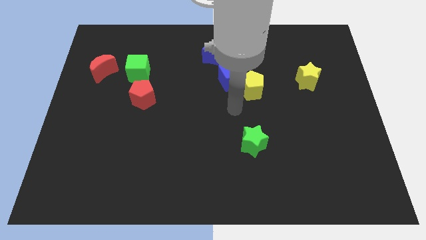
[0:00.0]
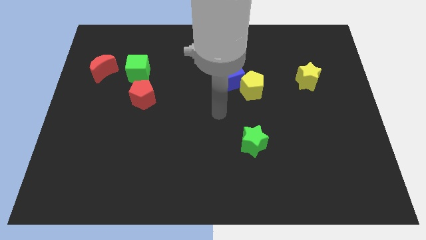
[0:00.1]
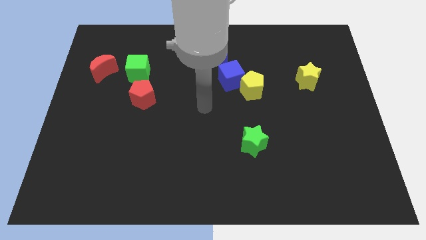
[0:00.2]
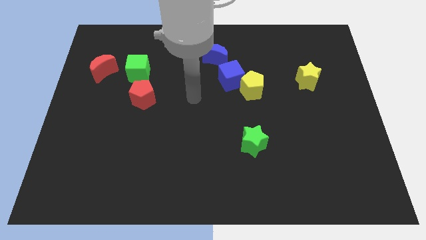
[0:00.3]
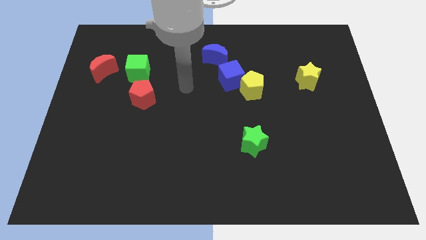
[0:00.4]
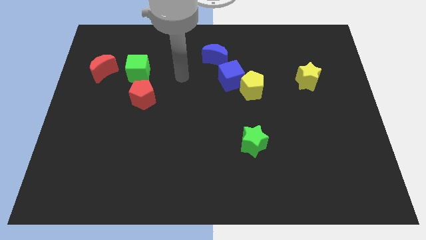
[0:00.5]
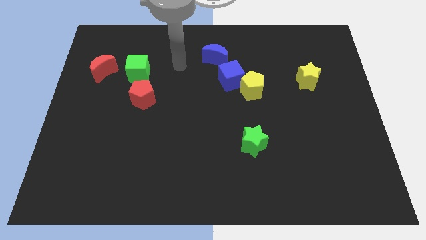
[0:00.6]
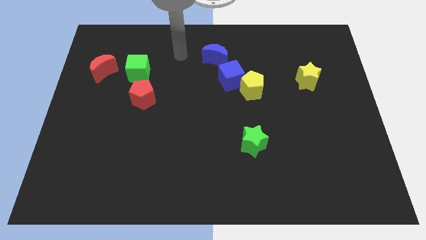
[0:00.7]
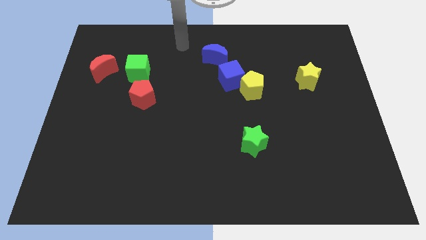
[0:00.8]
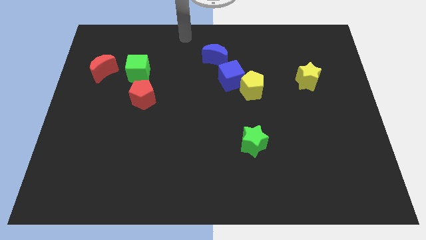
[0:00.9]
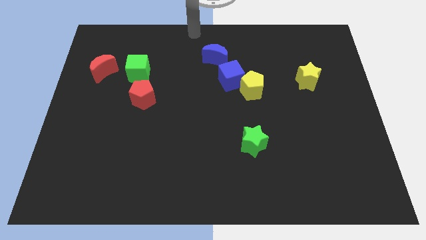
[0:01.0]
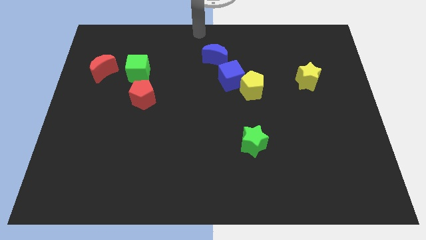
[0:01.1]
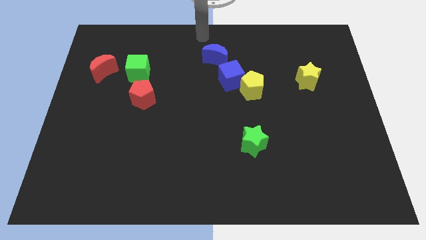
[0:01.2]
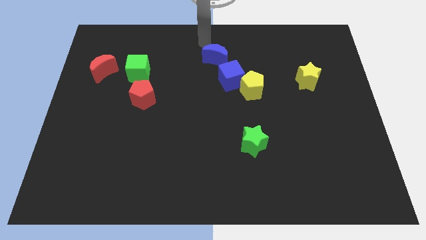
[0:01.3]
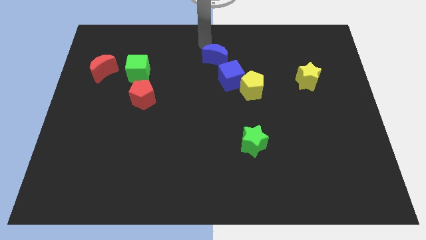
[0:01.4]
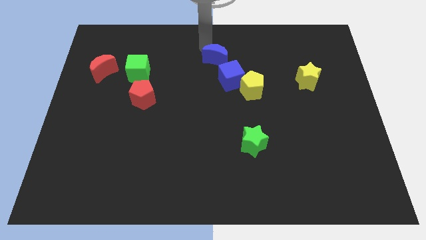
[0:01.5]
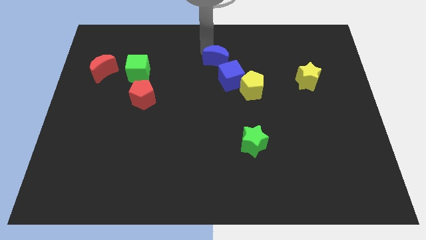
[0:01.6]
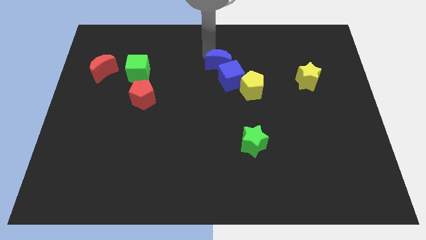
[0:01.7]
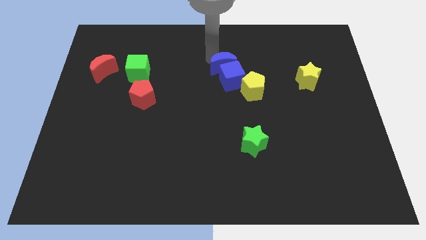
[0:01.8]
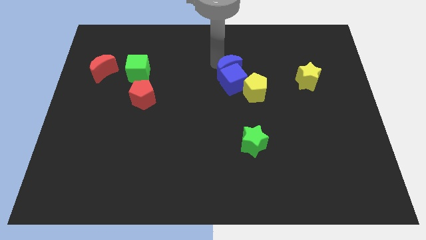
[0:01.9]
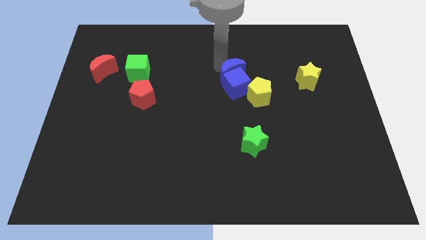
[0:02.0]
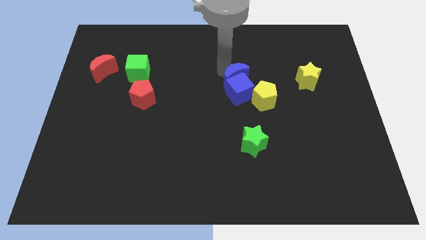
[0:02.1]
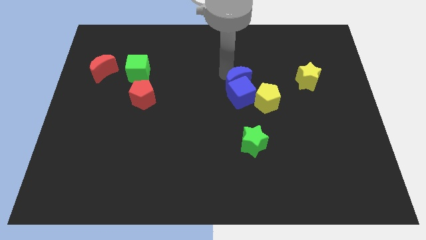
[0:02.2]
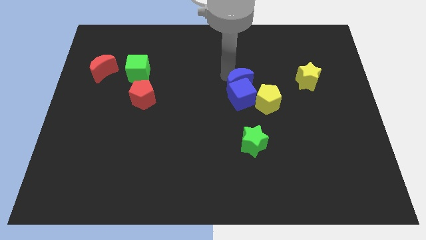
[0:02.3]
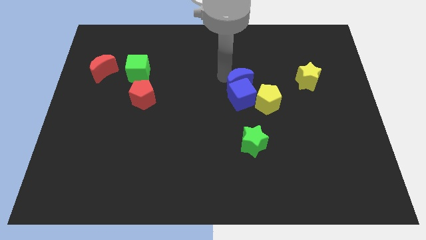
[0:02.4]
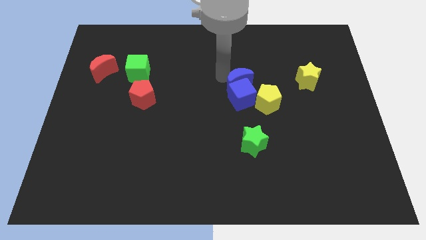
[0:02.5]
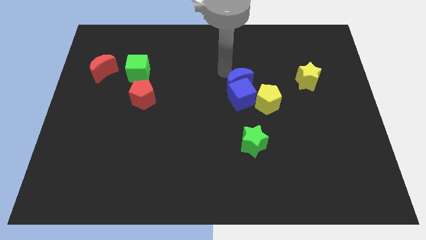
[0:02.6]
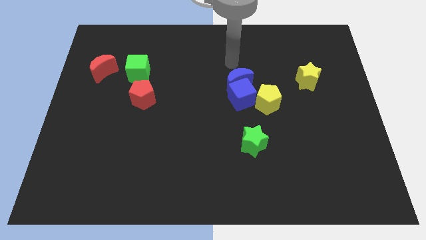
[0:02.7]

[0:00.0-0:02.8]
push the blue crescent into the blue cube

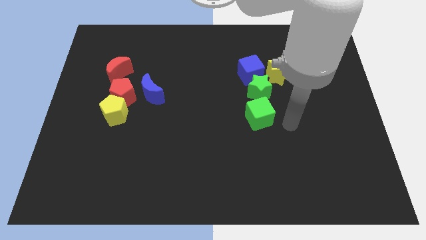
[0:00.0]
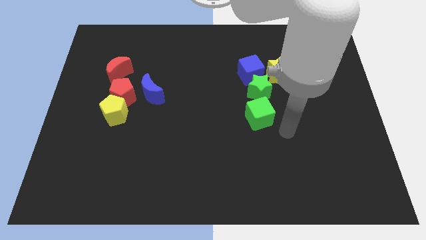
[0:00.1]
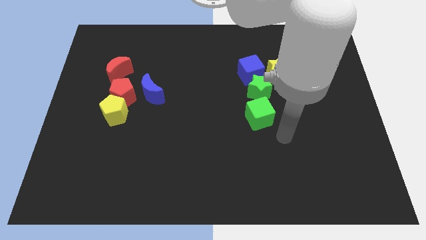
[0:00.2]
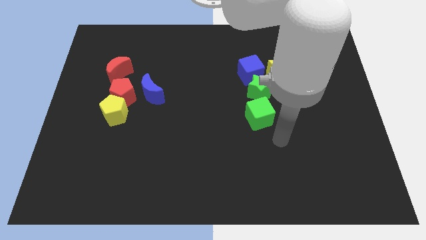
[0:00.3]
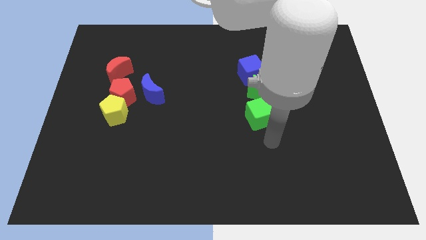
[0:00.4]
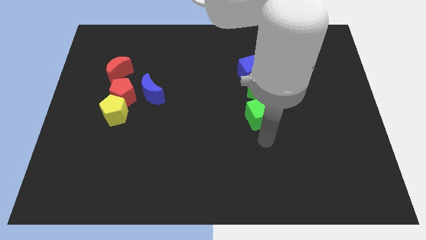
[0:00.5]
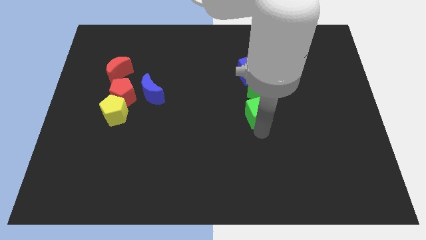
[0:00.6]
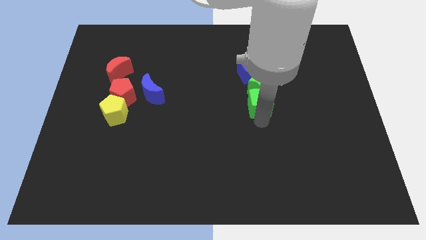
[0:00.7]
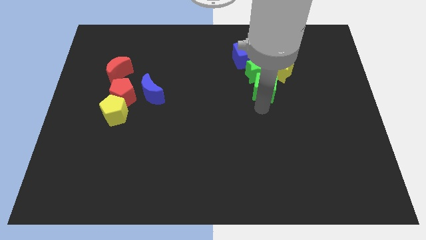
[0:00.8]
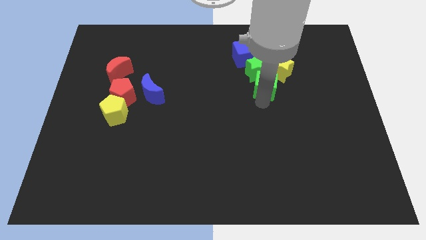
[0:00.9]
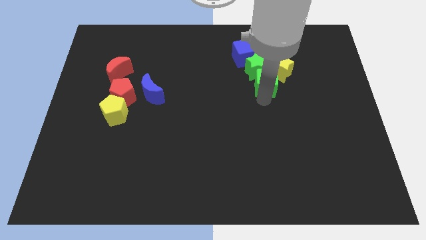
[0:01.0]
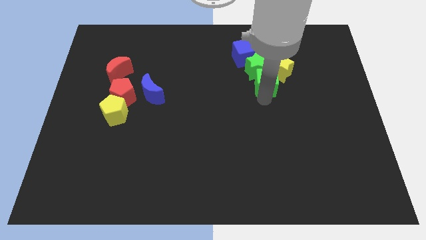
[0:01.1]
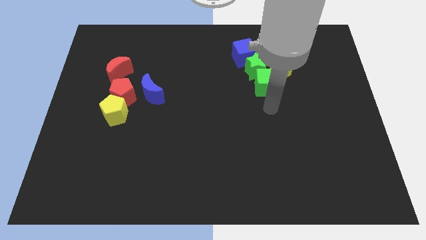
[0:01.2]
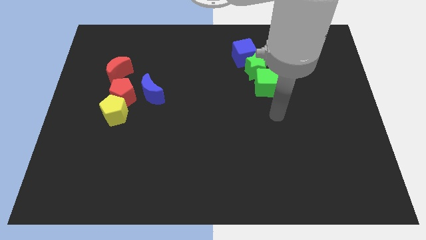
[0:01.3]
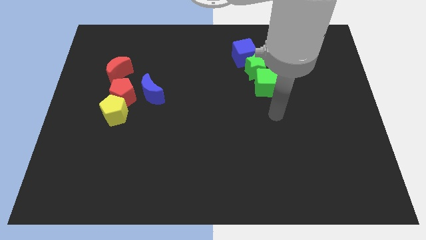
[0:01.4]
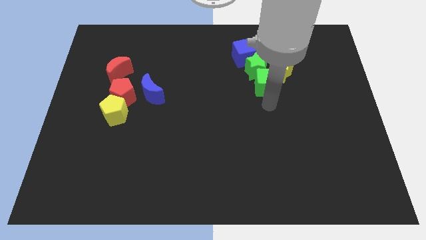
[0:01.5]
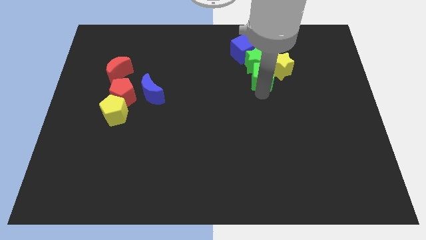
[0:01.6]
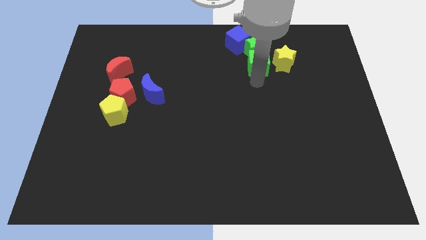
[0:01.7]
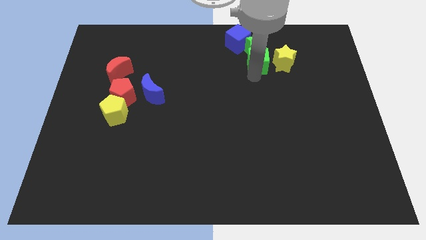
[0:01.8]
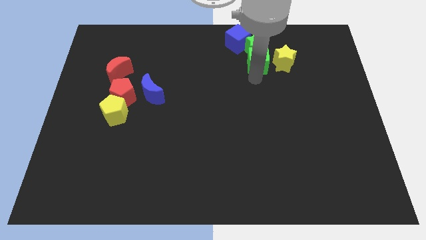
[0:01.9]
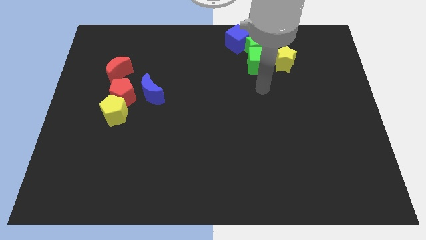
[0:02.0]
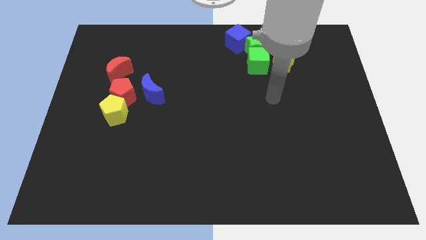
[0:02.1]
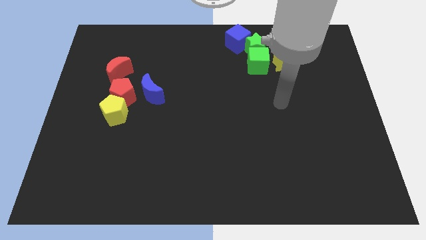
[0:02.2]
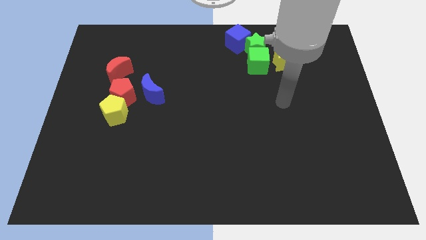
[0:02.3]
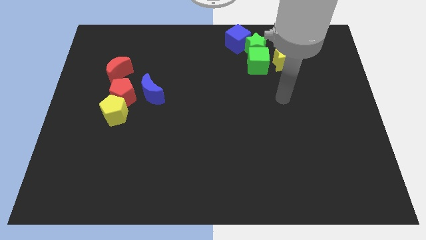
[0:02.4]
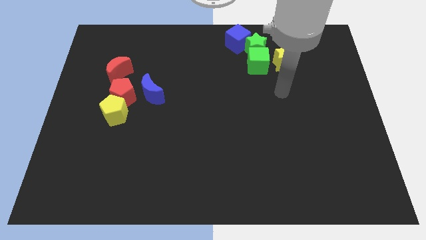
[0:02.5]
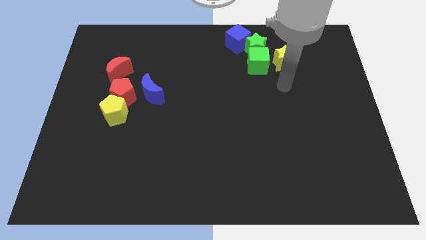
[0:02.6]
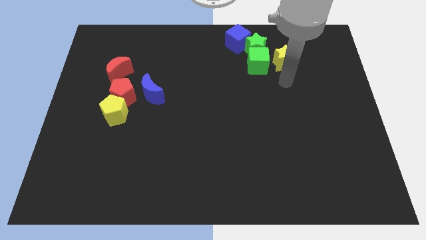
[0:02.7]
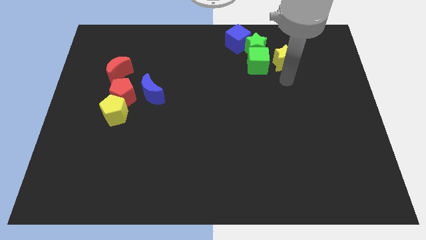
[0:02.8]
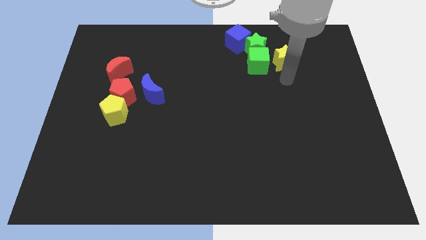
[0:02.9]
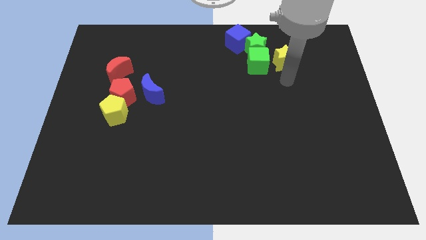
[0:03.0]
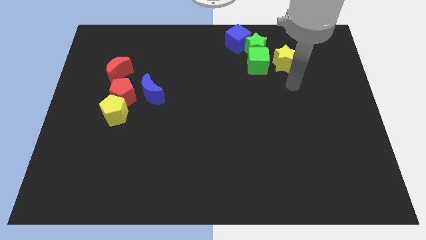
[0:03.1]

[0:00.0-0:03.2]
push green cube into group of blocks

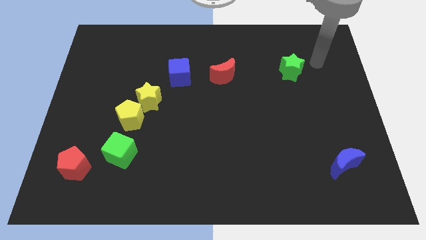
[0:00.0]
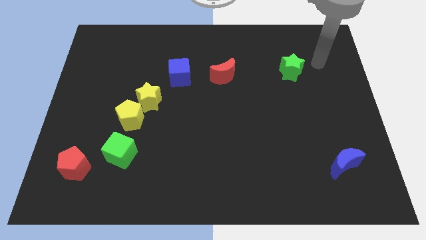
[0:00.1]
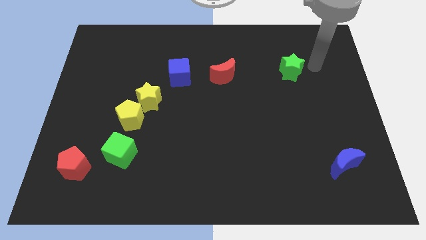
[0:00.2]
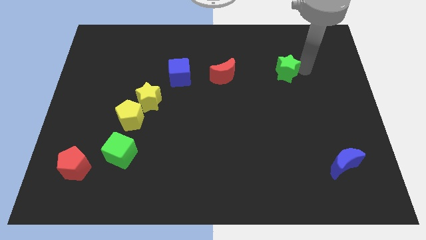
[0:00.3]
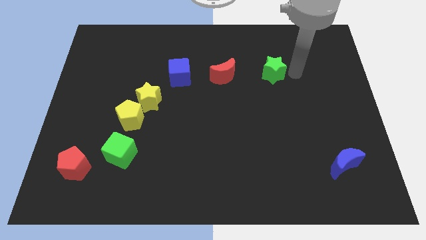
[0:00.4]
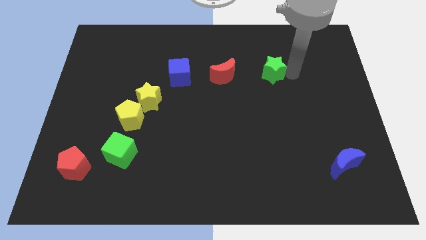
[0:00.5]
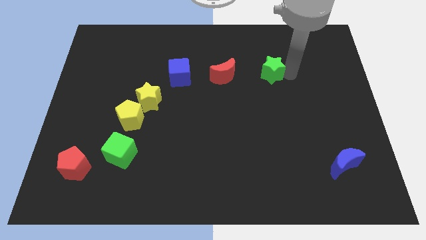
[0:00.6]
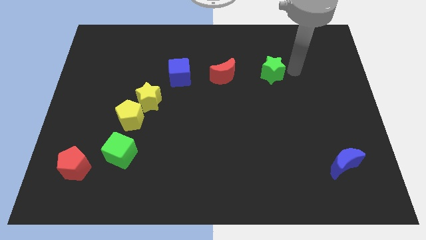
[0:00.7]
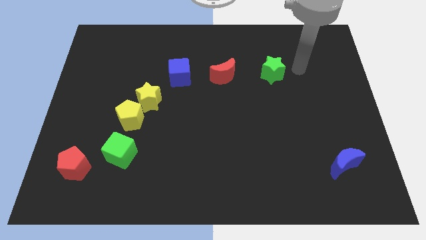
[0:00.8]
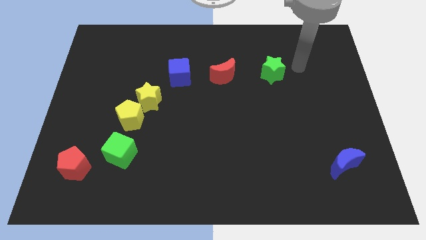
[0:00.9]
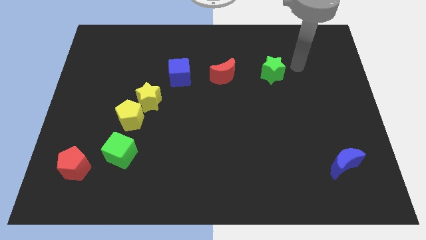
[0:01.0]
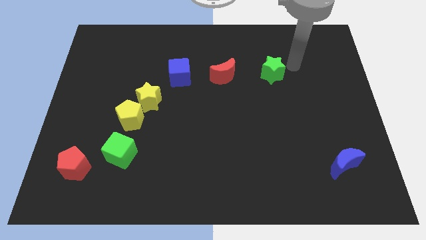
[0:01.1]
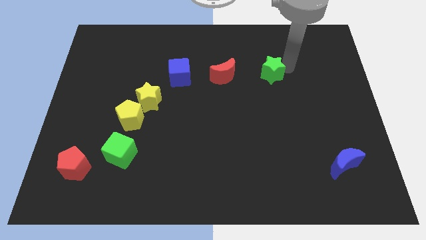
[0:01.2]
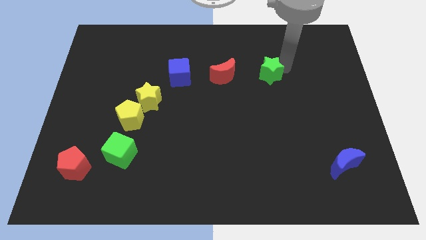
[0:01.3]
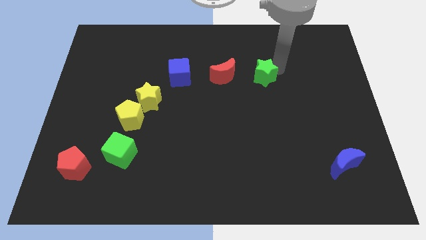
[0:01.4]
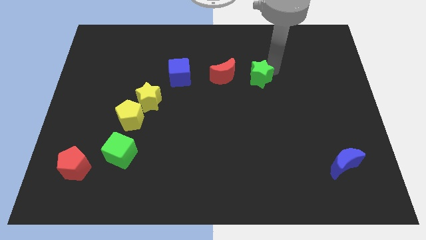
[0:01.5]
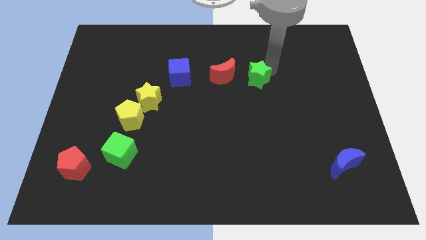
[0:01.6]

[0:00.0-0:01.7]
place the green star to the right side of red crescent

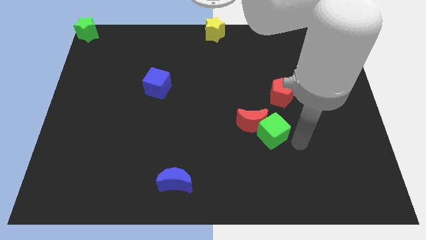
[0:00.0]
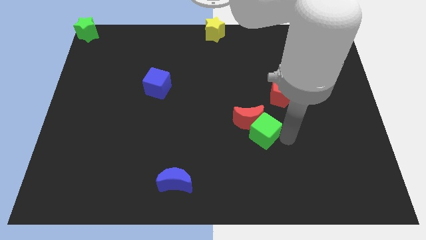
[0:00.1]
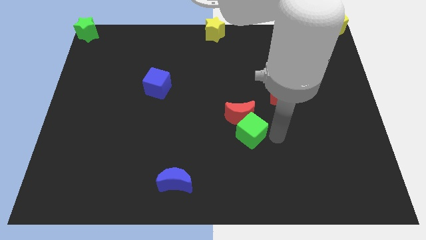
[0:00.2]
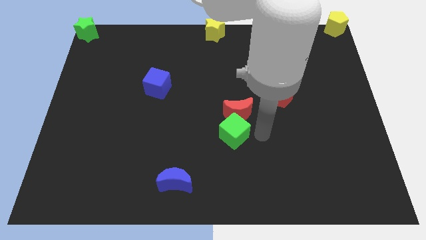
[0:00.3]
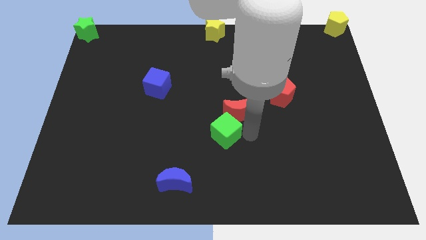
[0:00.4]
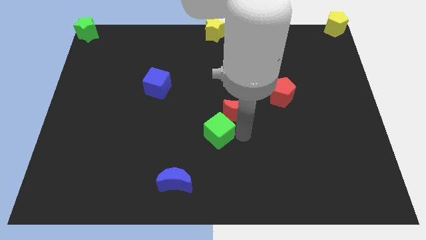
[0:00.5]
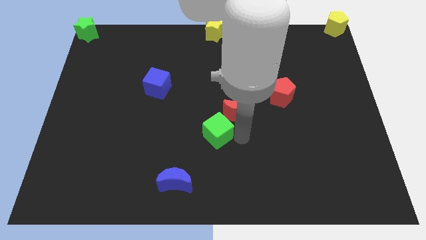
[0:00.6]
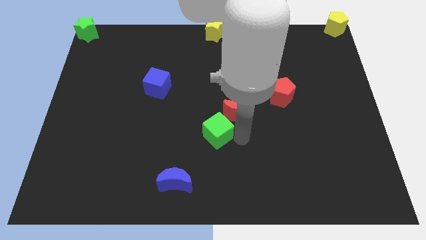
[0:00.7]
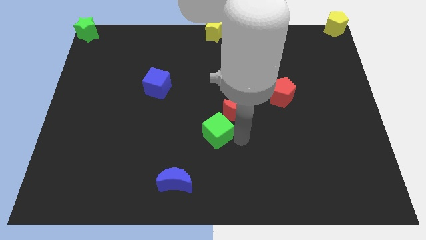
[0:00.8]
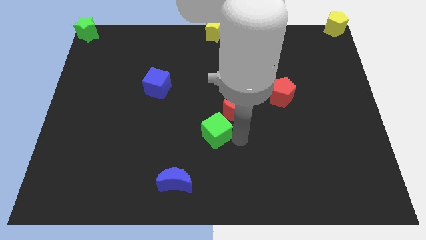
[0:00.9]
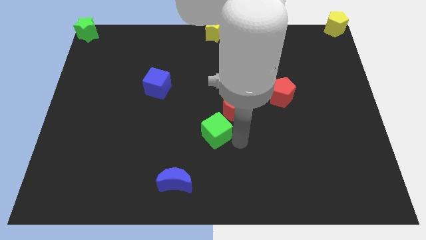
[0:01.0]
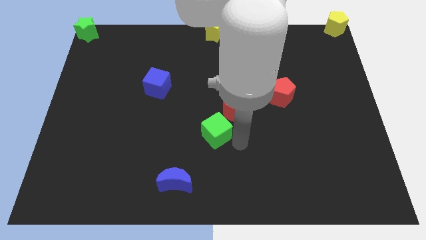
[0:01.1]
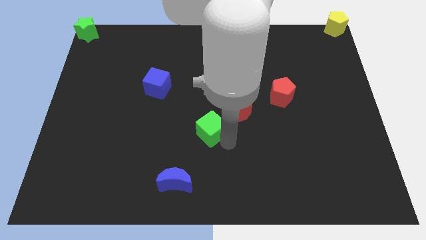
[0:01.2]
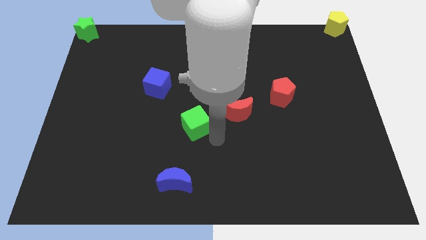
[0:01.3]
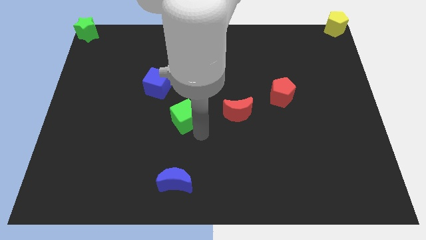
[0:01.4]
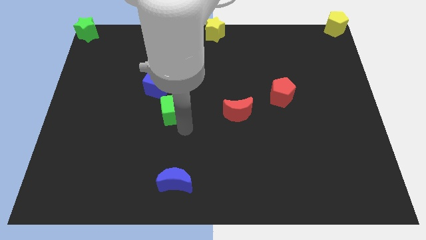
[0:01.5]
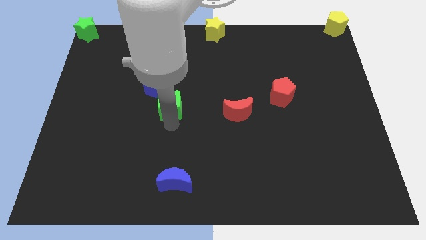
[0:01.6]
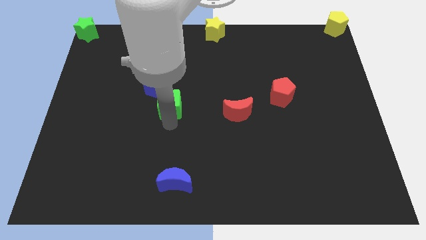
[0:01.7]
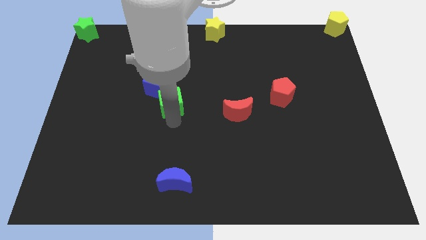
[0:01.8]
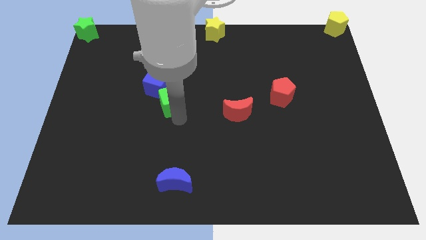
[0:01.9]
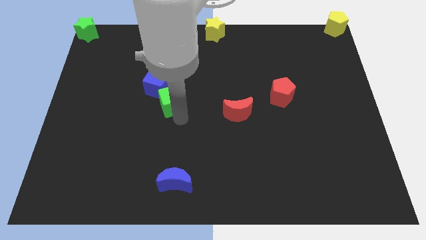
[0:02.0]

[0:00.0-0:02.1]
separate the green cube from the red crescent
